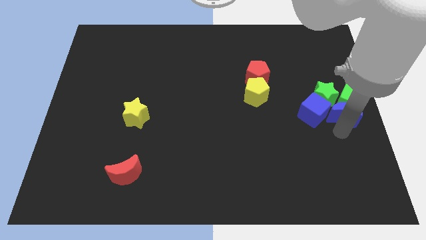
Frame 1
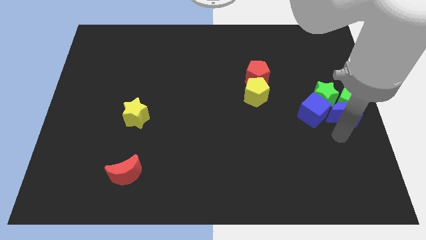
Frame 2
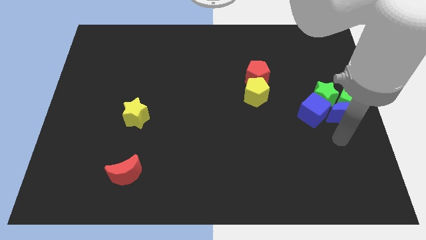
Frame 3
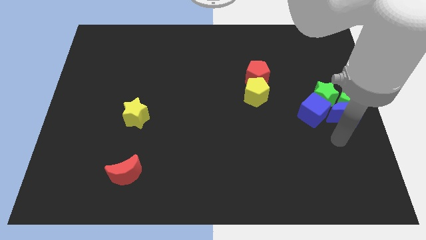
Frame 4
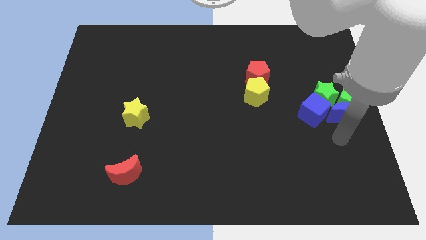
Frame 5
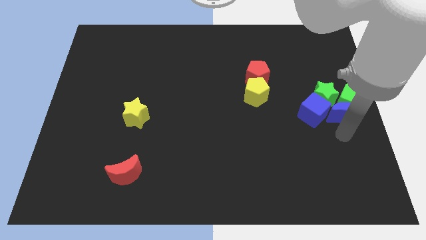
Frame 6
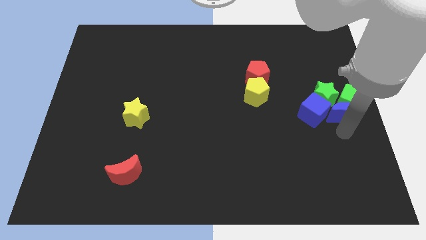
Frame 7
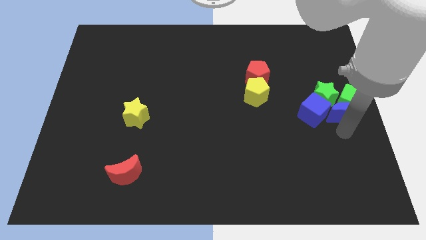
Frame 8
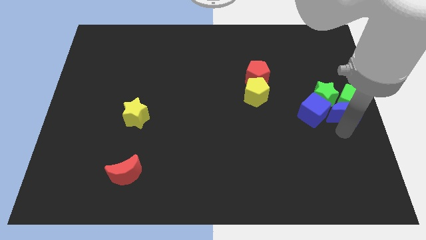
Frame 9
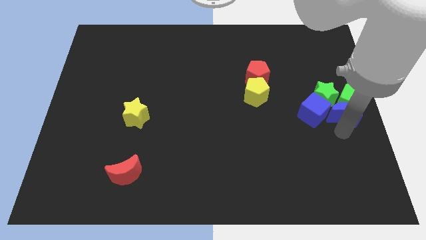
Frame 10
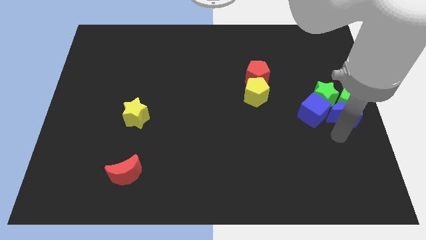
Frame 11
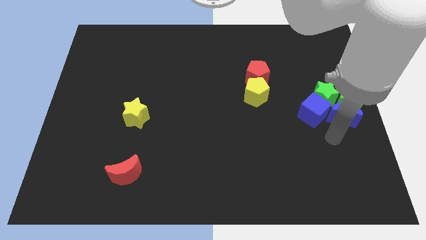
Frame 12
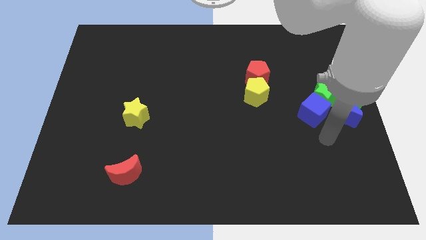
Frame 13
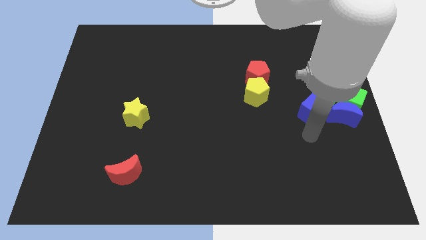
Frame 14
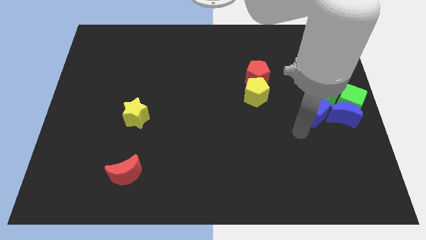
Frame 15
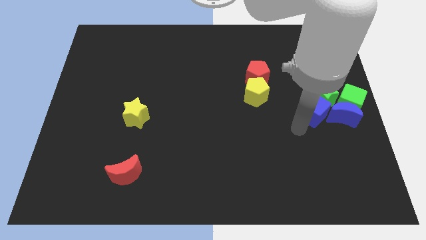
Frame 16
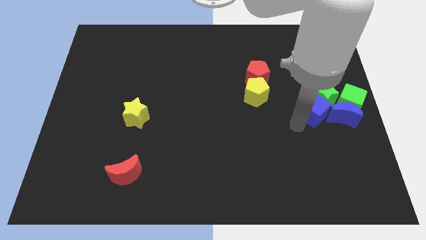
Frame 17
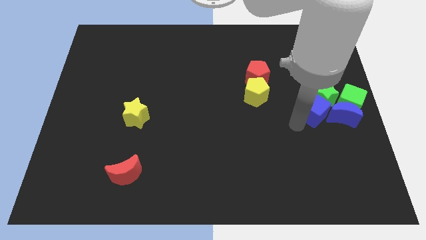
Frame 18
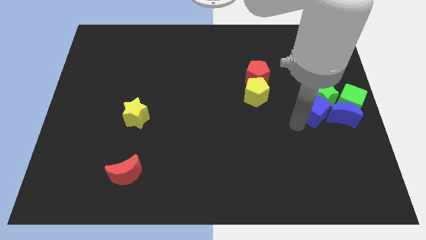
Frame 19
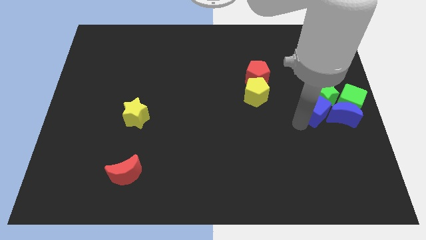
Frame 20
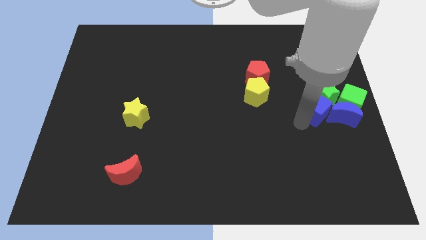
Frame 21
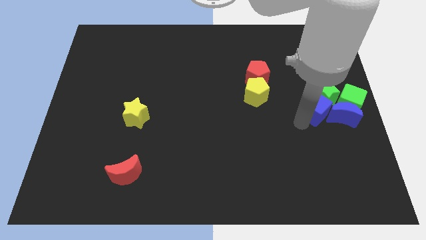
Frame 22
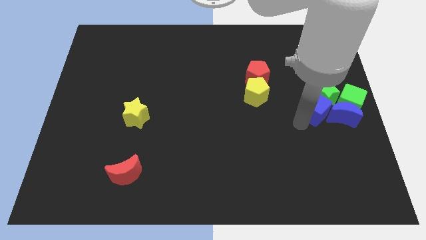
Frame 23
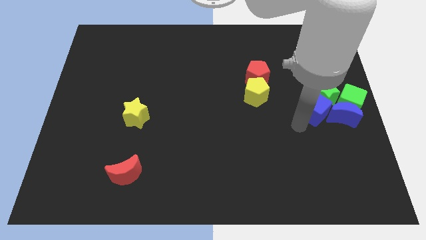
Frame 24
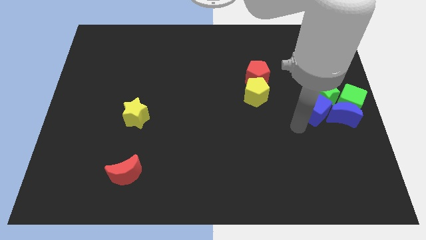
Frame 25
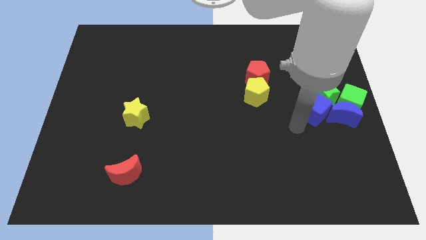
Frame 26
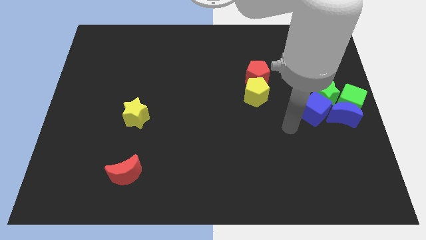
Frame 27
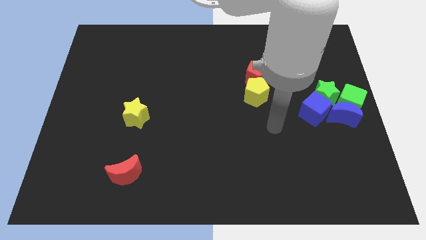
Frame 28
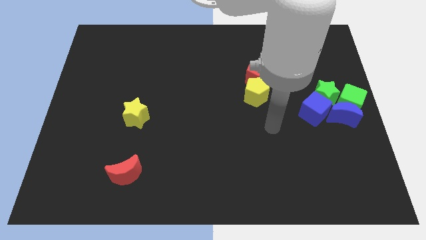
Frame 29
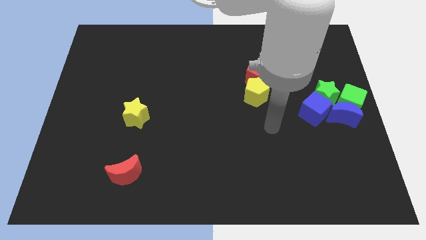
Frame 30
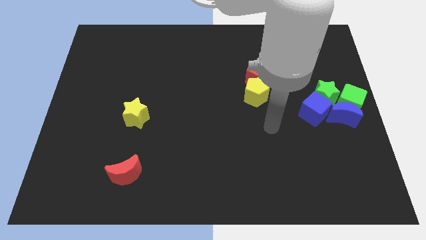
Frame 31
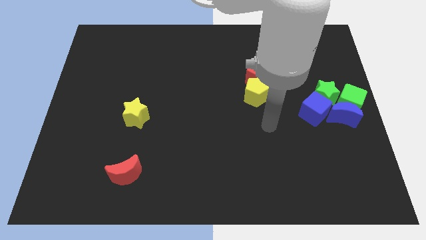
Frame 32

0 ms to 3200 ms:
move the blue blocks into green blocks

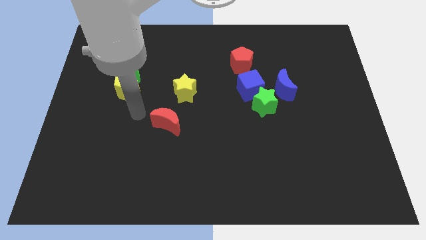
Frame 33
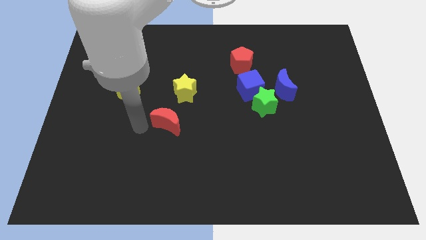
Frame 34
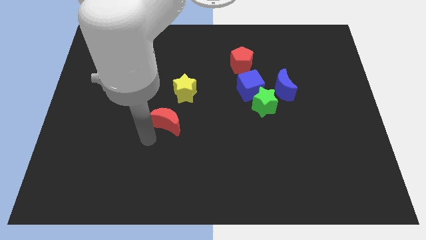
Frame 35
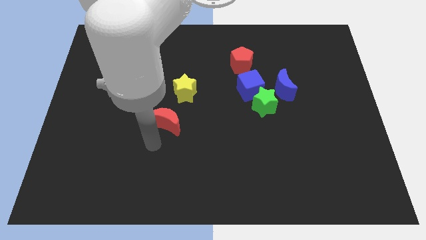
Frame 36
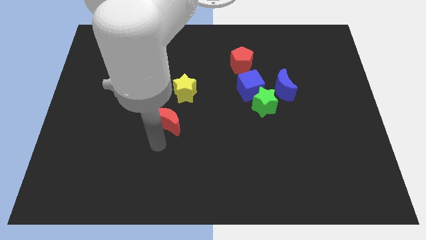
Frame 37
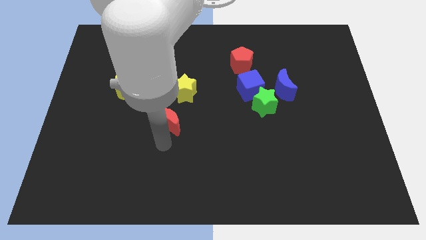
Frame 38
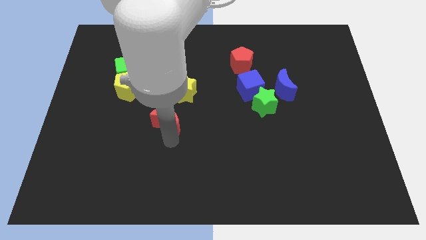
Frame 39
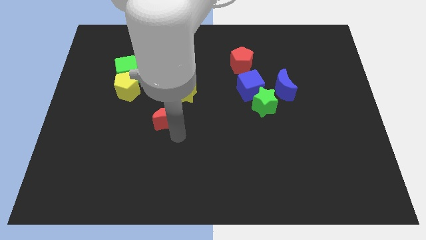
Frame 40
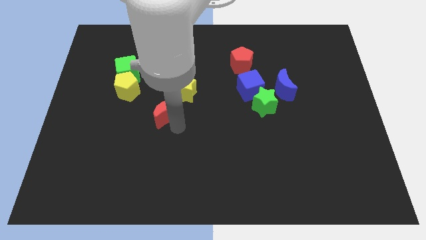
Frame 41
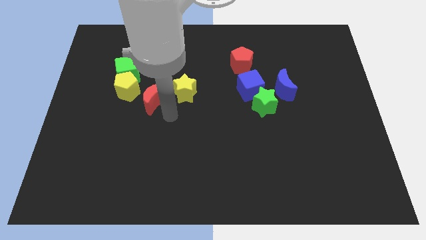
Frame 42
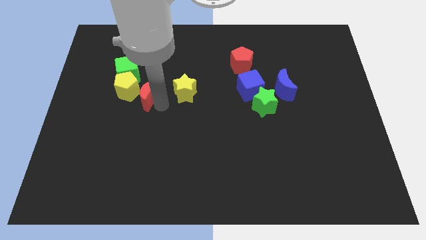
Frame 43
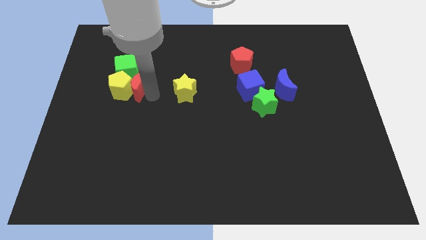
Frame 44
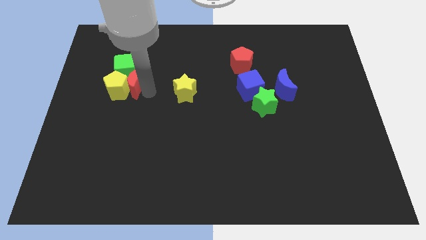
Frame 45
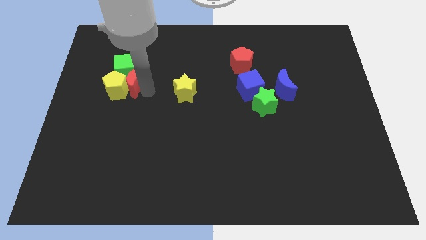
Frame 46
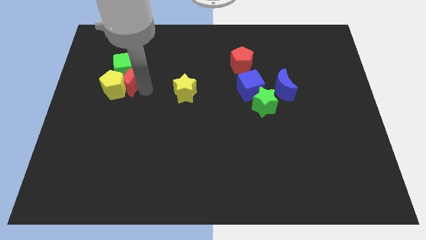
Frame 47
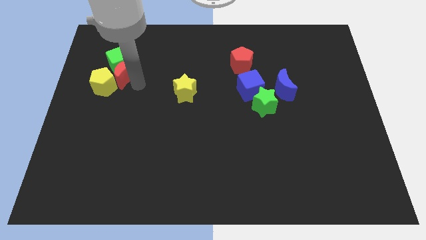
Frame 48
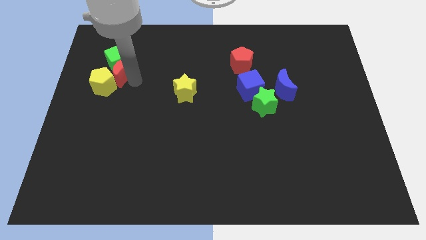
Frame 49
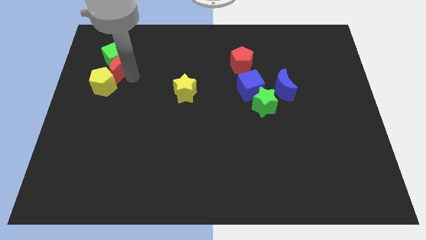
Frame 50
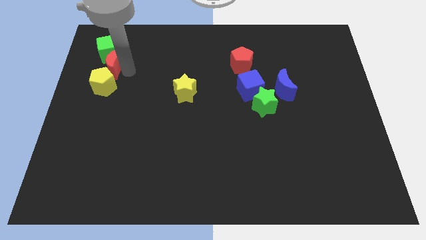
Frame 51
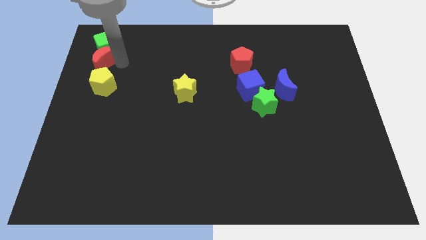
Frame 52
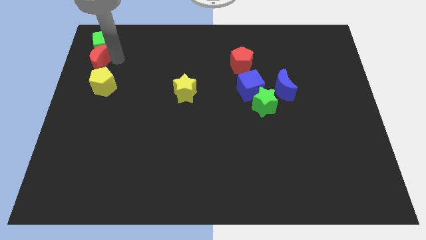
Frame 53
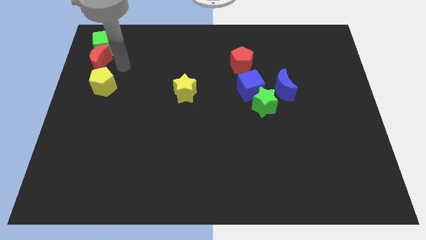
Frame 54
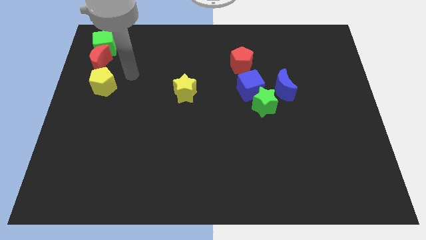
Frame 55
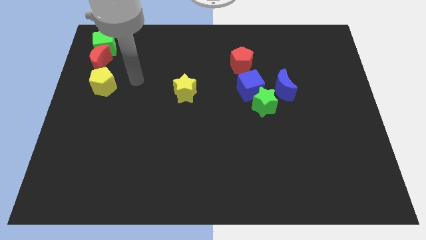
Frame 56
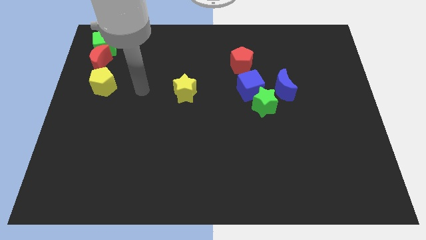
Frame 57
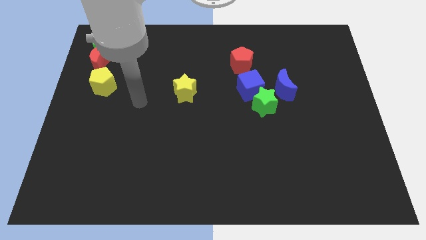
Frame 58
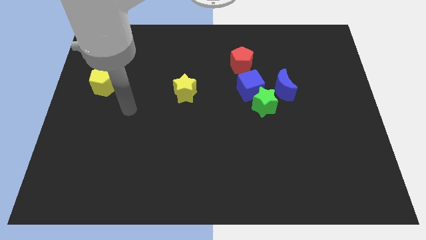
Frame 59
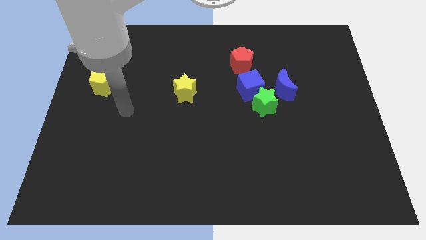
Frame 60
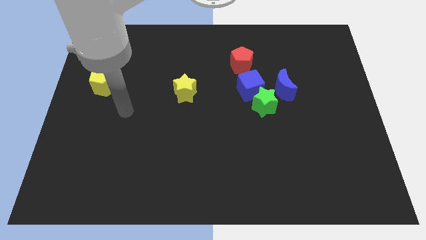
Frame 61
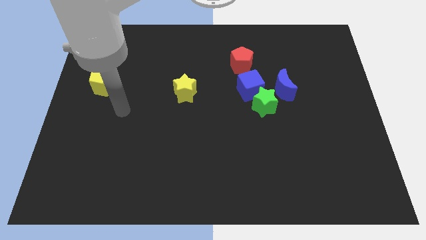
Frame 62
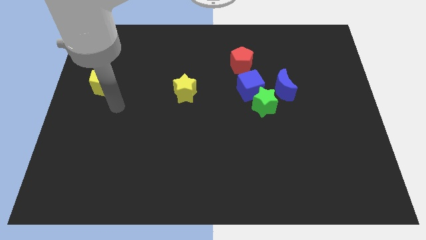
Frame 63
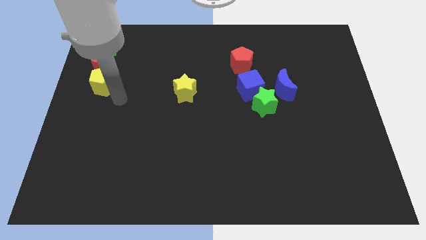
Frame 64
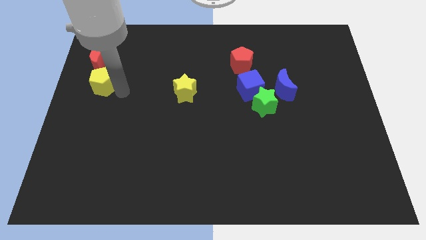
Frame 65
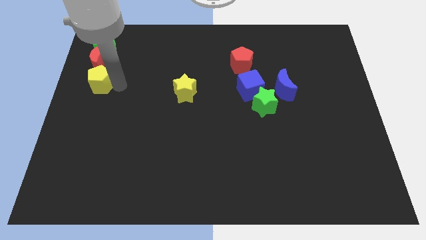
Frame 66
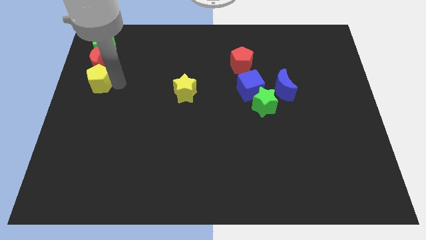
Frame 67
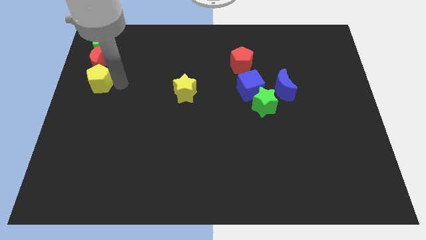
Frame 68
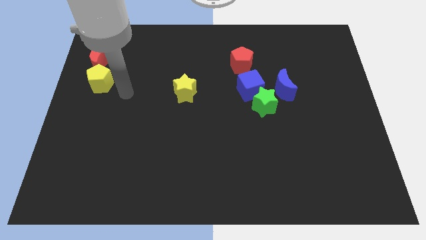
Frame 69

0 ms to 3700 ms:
make a vertical line out of yellow pentagon red moon and the green cube

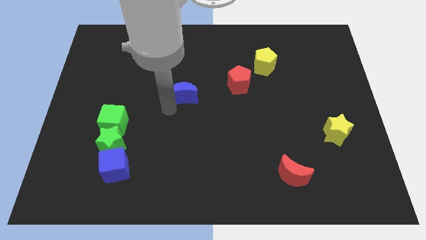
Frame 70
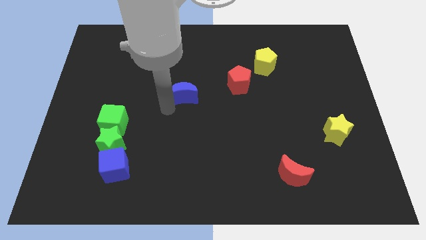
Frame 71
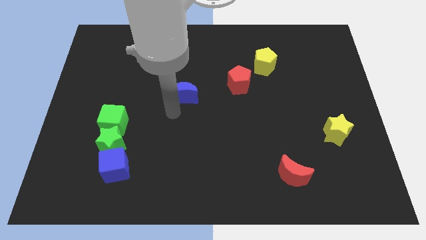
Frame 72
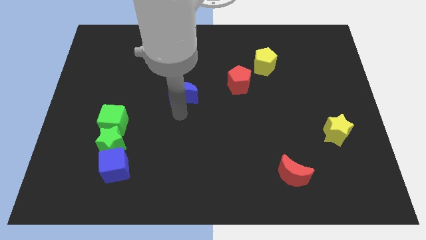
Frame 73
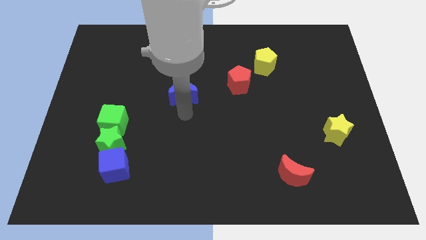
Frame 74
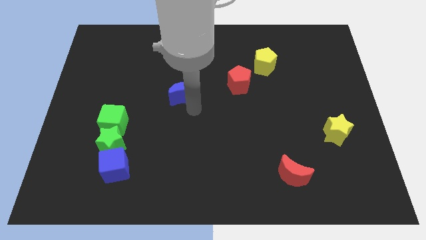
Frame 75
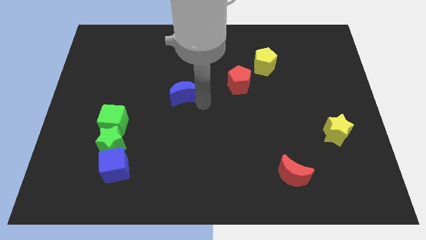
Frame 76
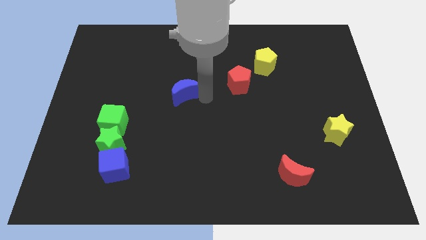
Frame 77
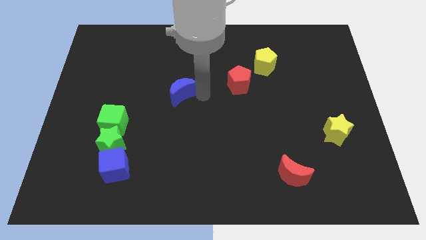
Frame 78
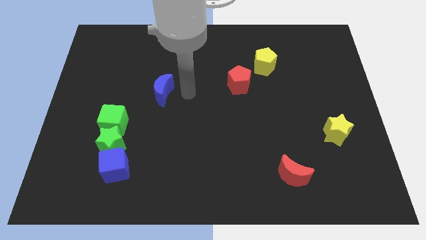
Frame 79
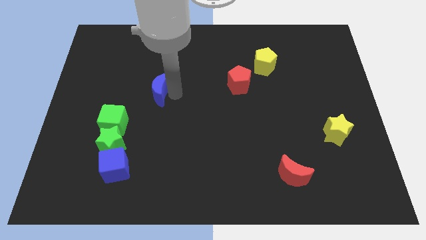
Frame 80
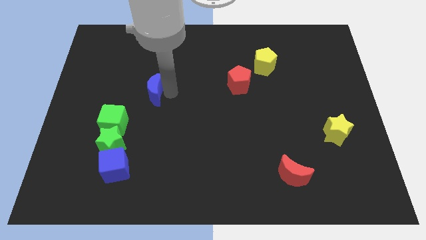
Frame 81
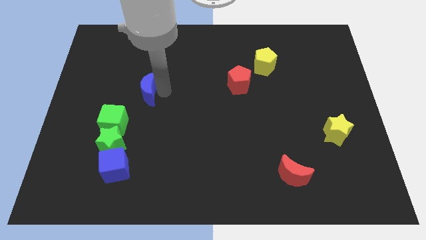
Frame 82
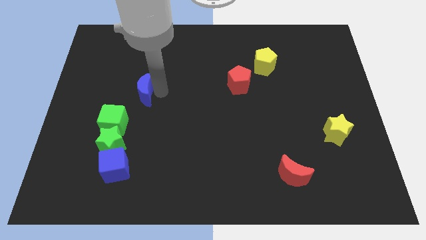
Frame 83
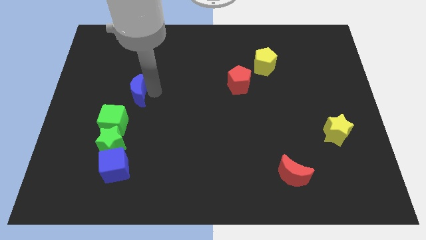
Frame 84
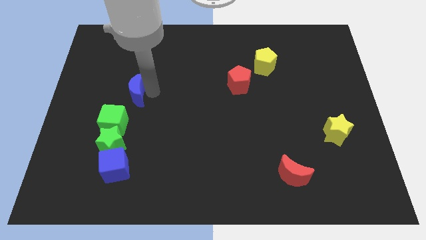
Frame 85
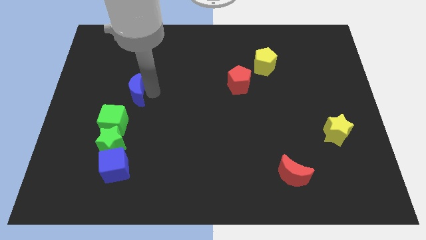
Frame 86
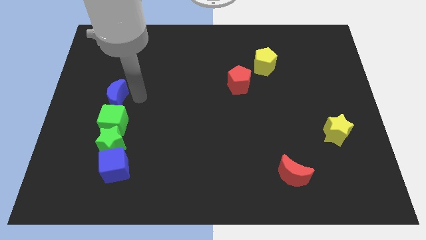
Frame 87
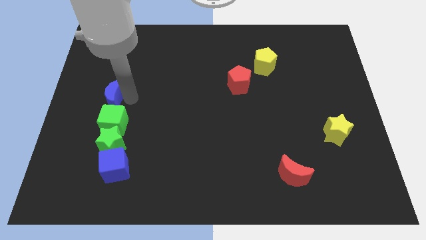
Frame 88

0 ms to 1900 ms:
place the blue crescent to the top of the green cube

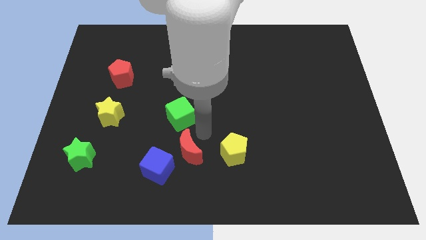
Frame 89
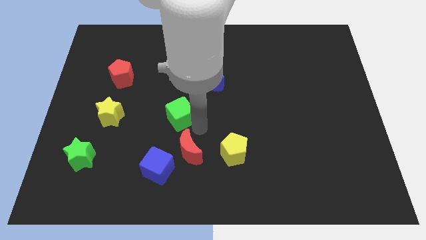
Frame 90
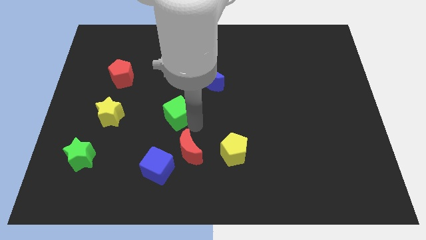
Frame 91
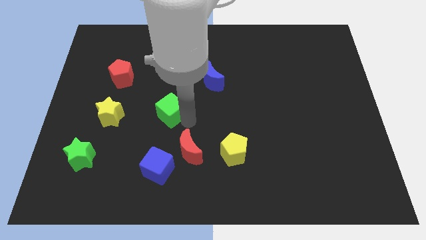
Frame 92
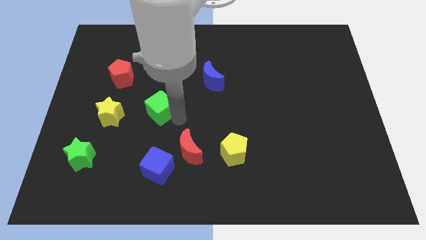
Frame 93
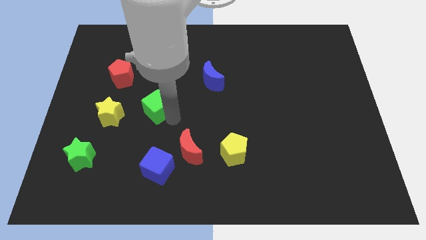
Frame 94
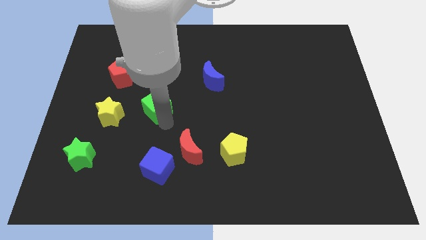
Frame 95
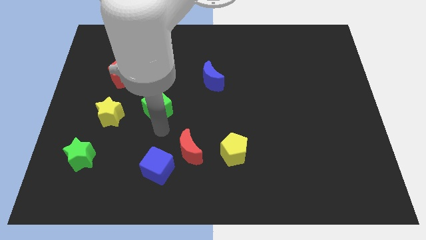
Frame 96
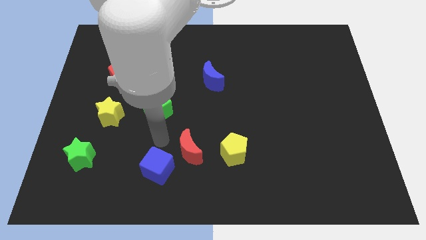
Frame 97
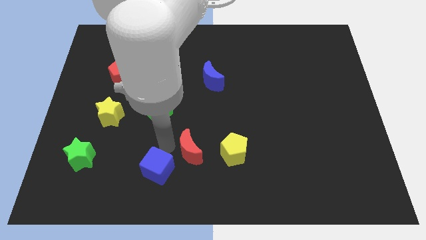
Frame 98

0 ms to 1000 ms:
push the green cube slightly to the left
